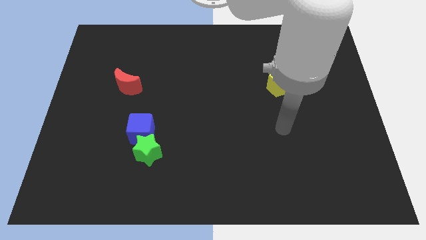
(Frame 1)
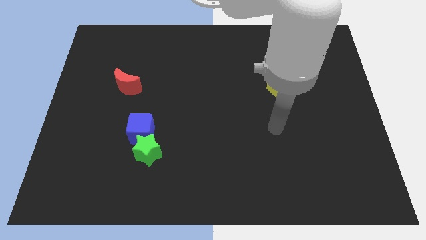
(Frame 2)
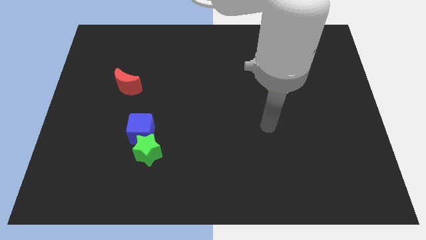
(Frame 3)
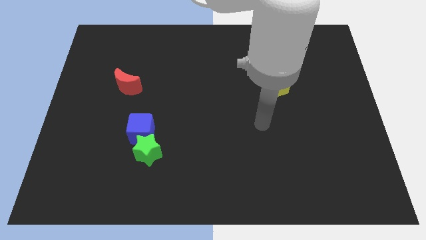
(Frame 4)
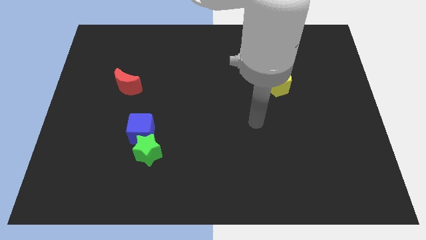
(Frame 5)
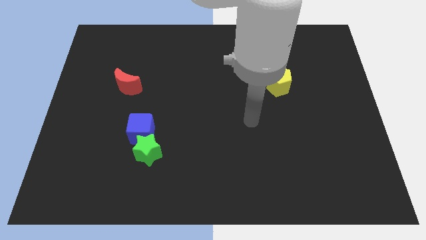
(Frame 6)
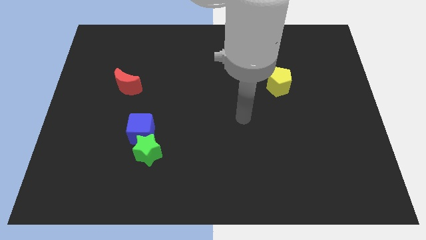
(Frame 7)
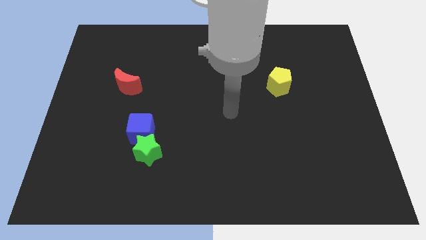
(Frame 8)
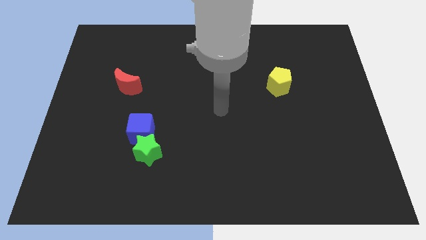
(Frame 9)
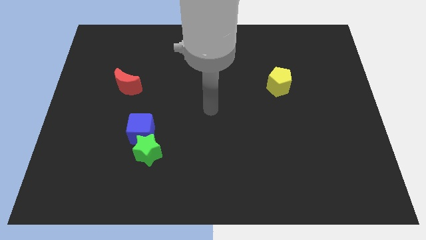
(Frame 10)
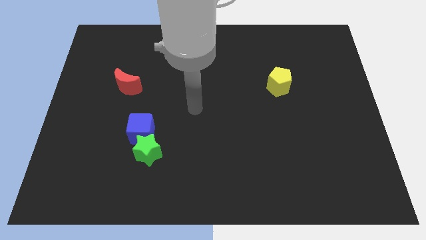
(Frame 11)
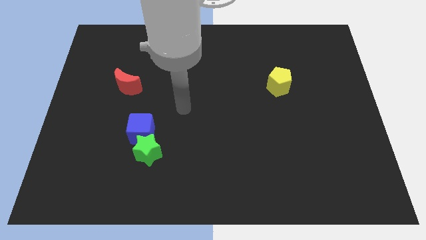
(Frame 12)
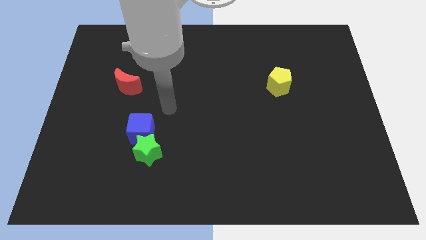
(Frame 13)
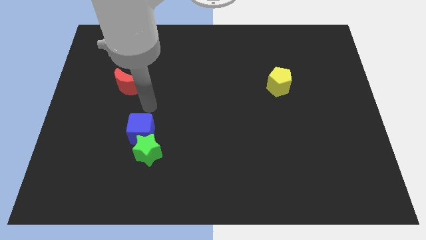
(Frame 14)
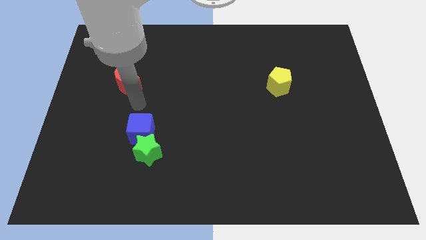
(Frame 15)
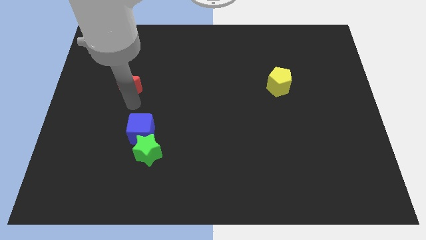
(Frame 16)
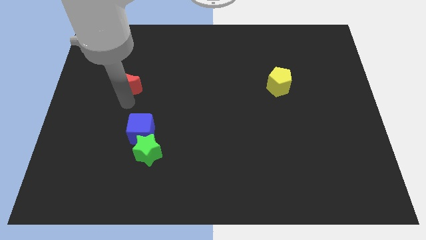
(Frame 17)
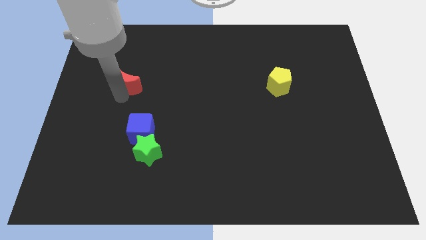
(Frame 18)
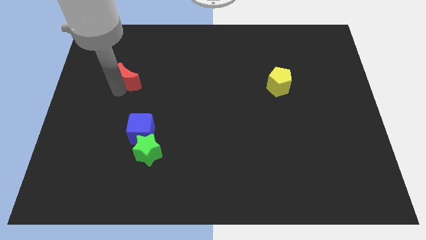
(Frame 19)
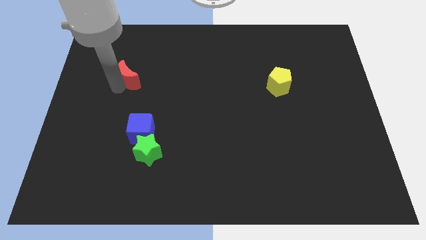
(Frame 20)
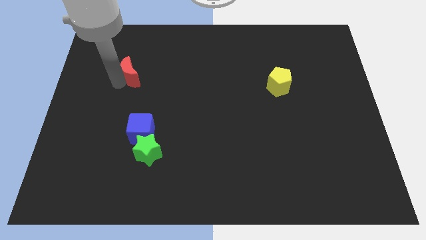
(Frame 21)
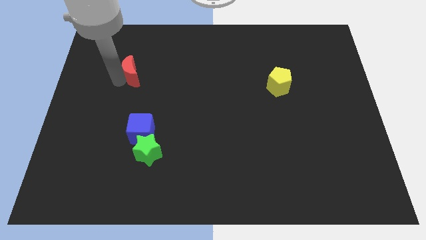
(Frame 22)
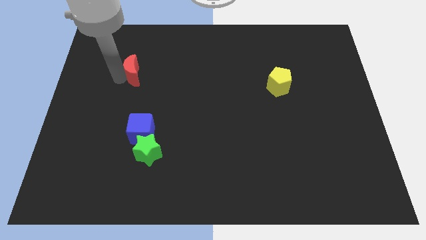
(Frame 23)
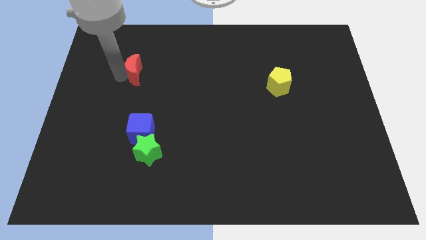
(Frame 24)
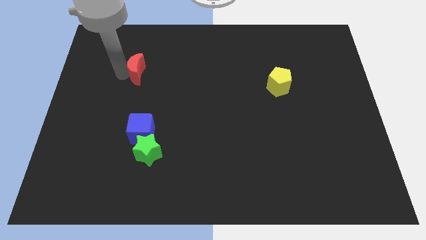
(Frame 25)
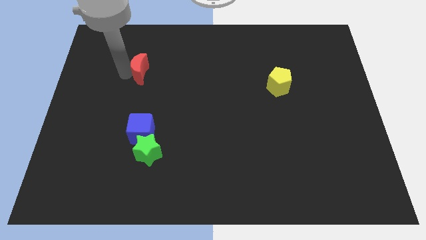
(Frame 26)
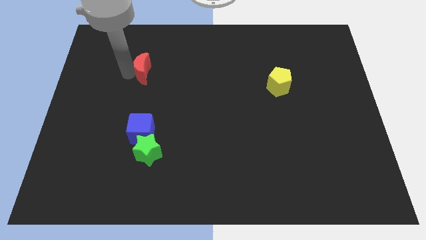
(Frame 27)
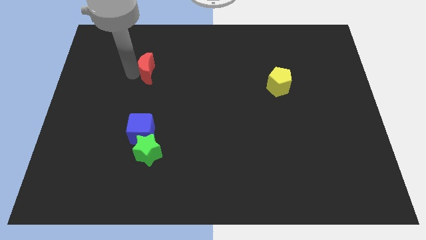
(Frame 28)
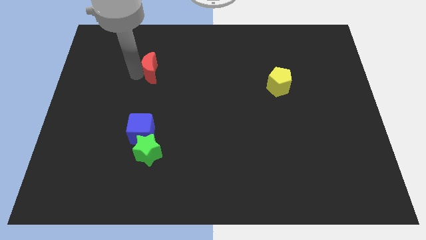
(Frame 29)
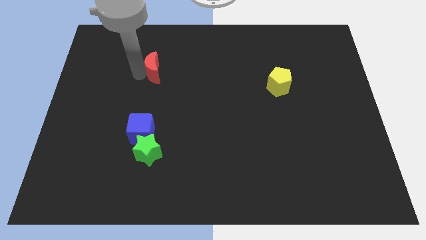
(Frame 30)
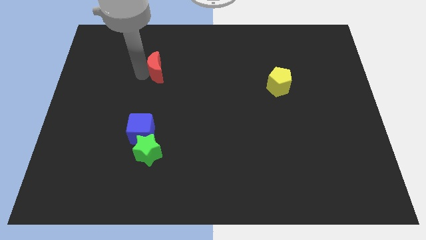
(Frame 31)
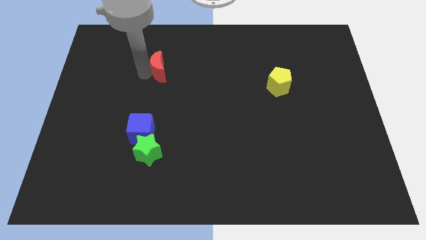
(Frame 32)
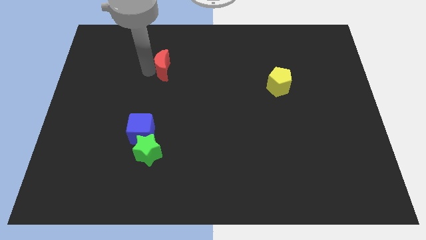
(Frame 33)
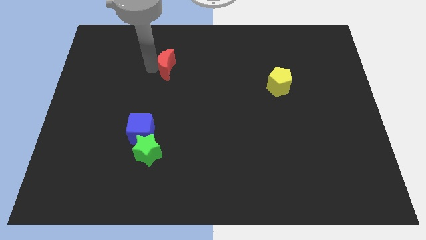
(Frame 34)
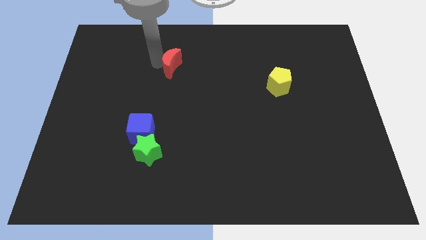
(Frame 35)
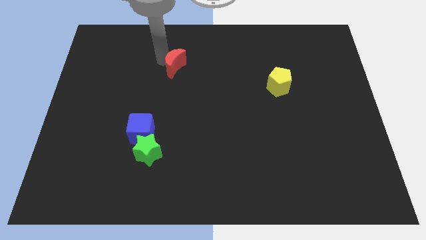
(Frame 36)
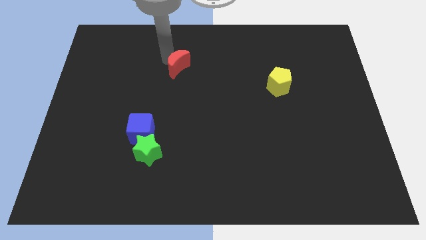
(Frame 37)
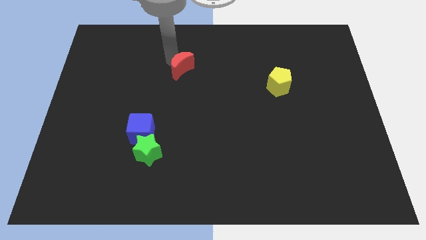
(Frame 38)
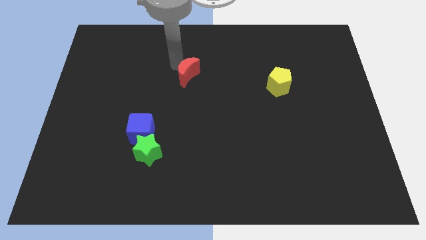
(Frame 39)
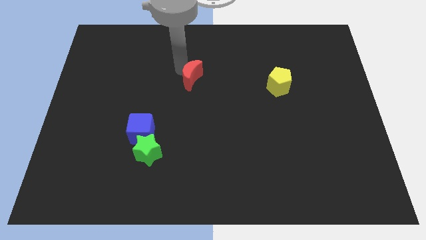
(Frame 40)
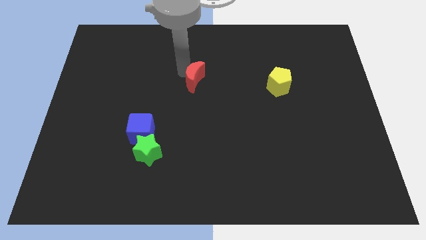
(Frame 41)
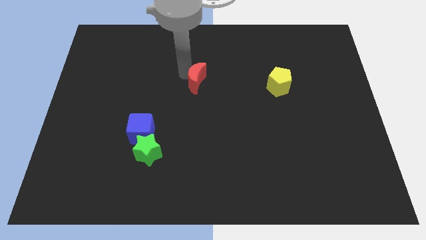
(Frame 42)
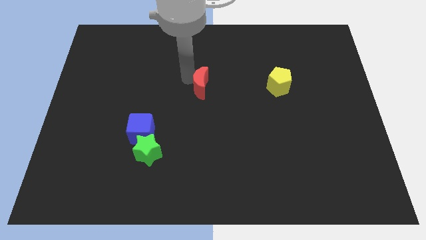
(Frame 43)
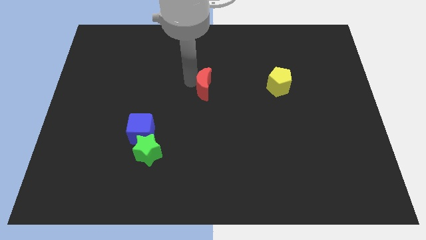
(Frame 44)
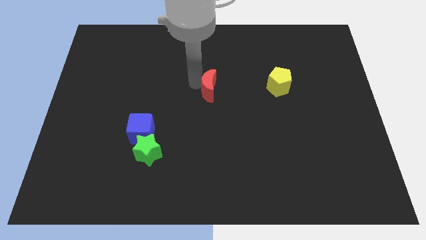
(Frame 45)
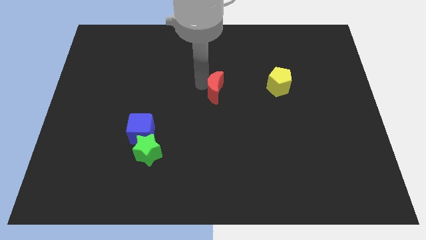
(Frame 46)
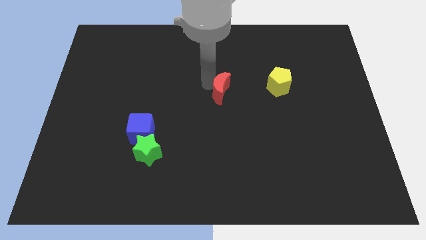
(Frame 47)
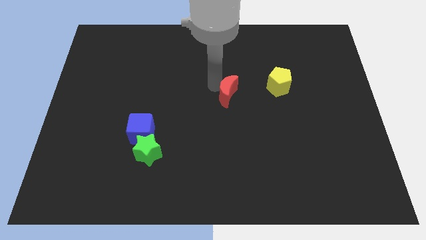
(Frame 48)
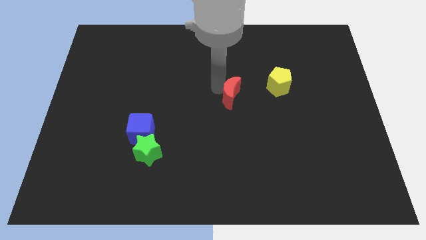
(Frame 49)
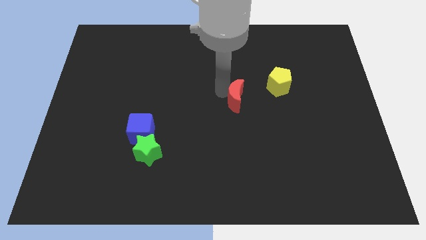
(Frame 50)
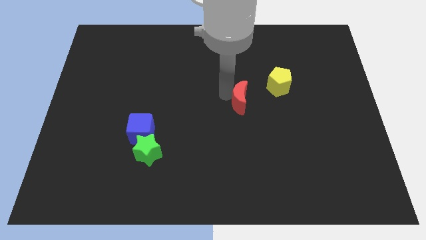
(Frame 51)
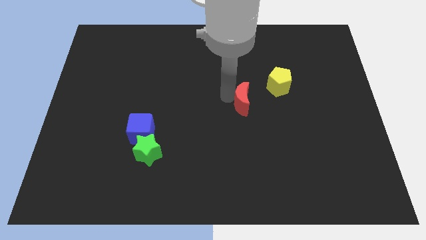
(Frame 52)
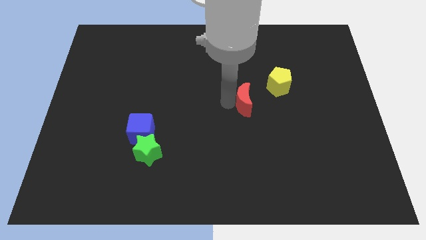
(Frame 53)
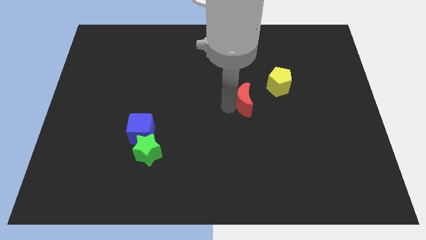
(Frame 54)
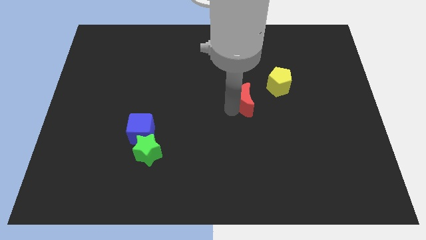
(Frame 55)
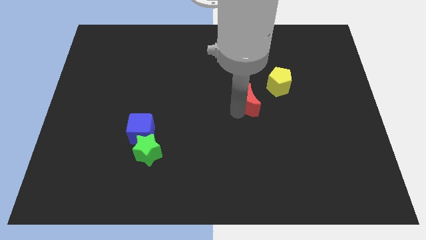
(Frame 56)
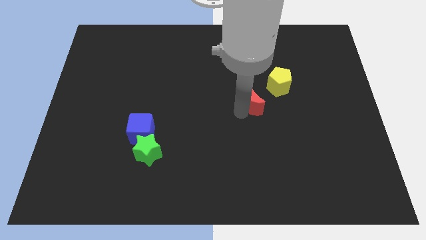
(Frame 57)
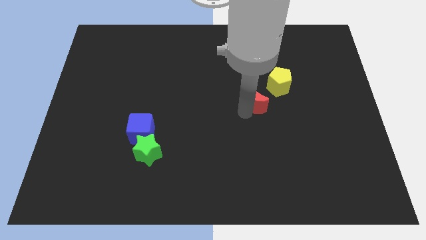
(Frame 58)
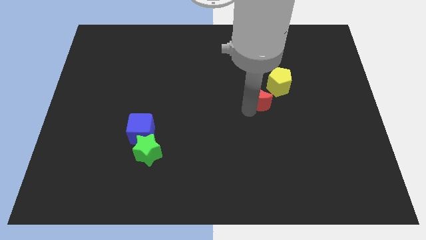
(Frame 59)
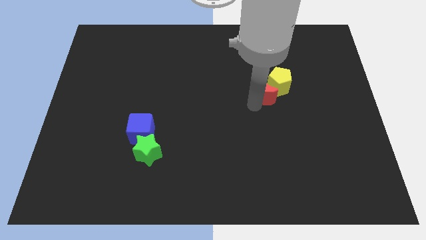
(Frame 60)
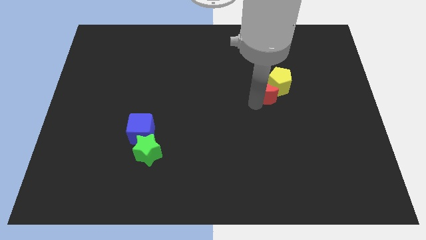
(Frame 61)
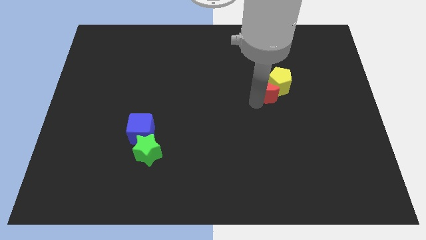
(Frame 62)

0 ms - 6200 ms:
move the moon next to the yellow pentagon

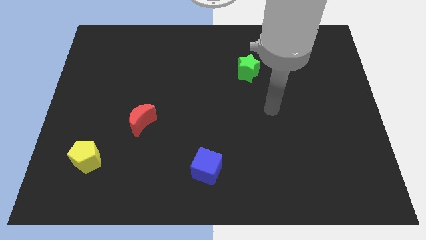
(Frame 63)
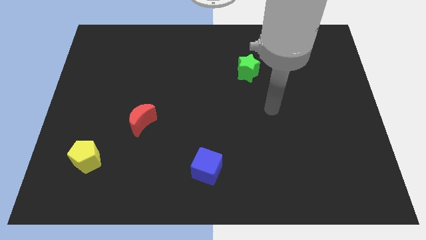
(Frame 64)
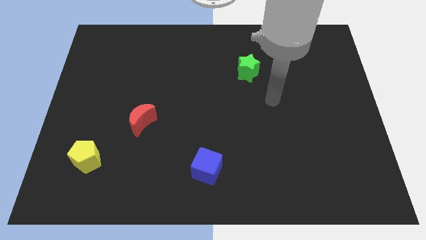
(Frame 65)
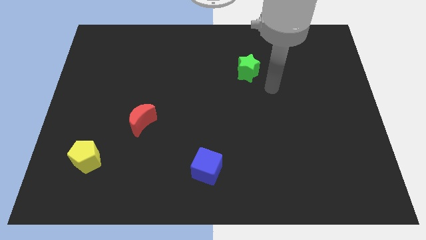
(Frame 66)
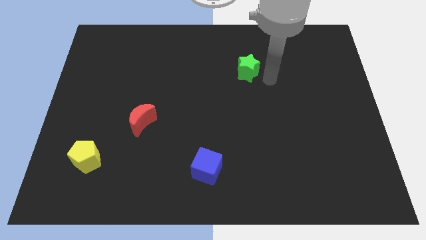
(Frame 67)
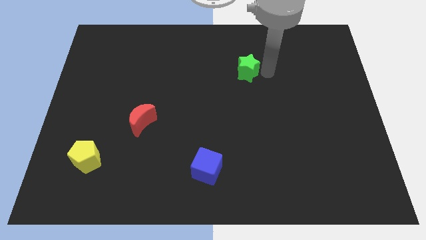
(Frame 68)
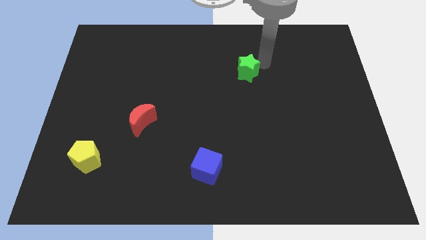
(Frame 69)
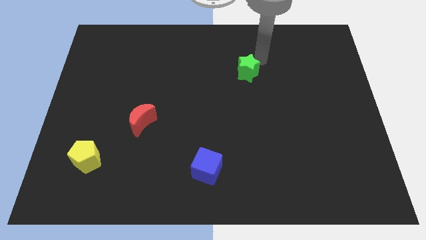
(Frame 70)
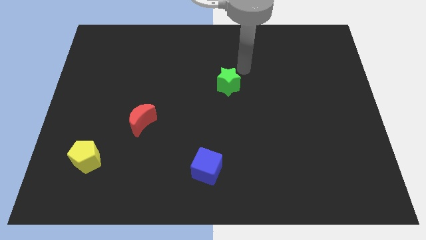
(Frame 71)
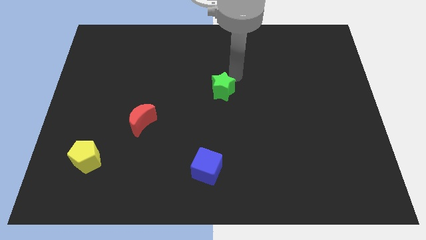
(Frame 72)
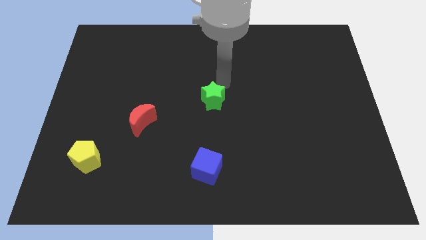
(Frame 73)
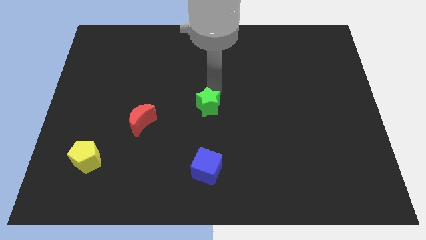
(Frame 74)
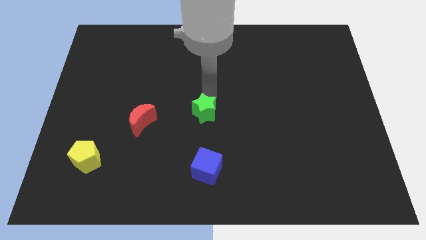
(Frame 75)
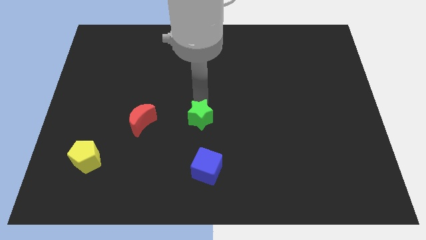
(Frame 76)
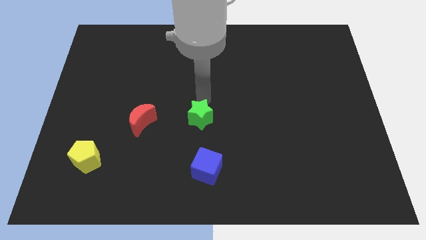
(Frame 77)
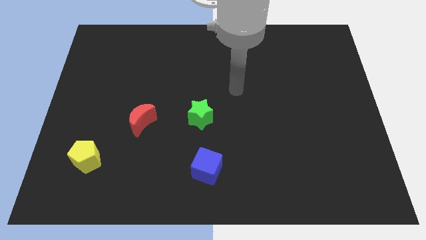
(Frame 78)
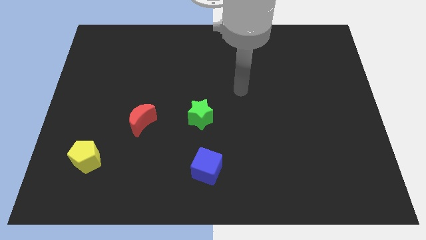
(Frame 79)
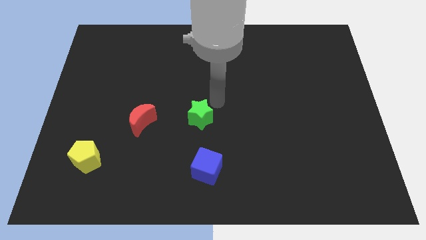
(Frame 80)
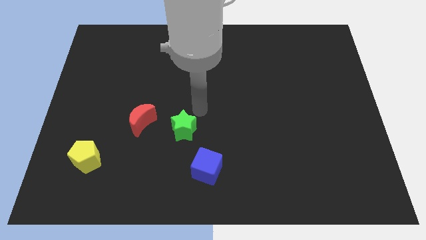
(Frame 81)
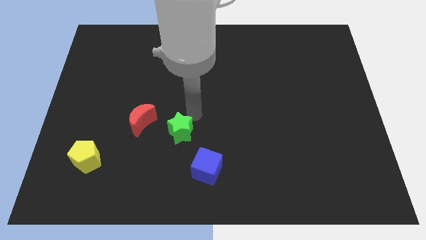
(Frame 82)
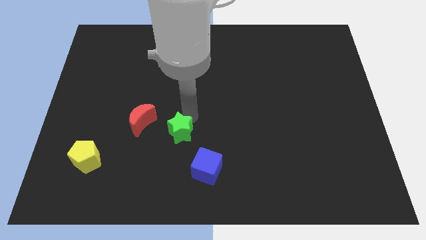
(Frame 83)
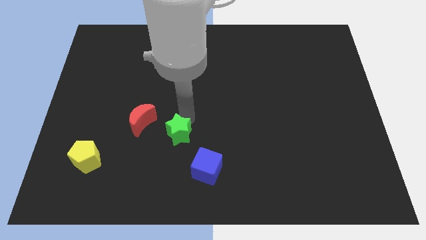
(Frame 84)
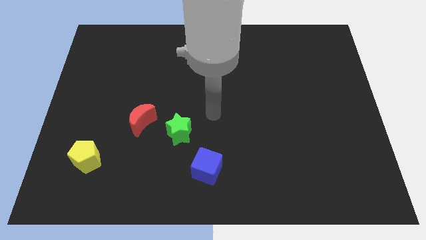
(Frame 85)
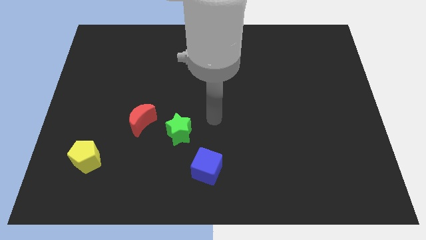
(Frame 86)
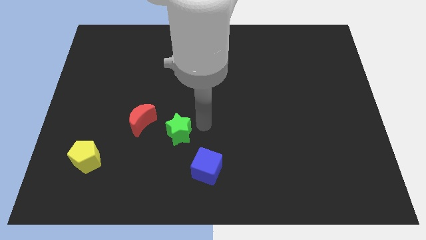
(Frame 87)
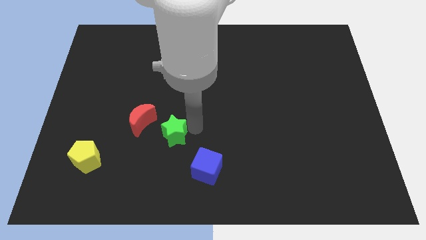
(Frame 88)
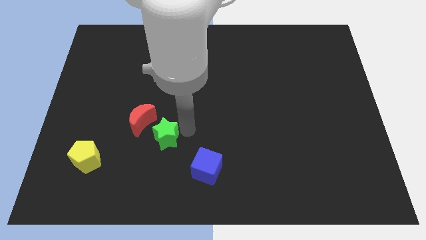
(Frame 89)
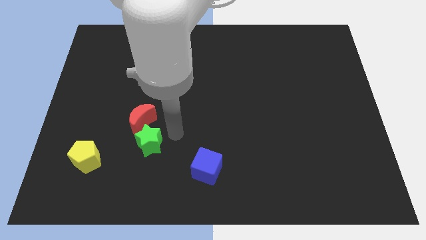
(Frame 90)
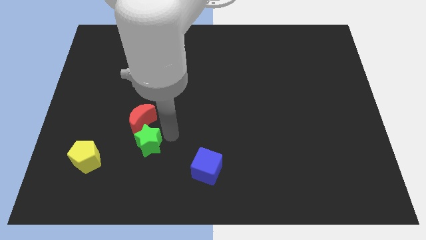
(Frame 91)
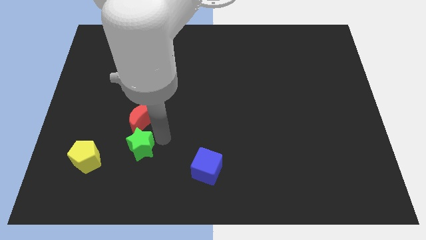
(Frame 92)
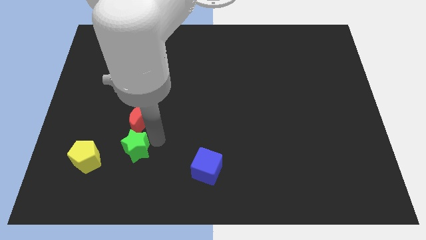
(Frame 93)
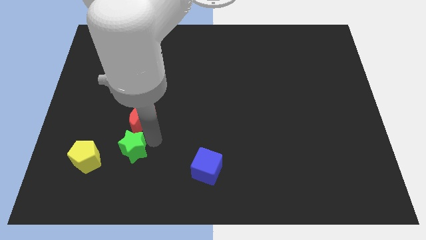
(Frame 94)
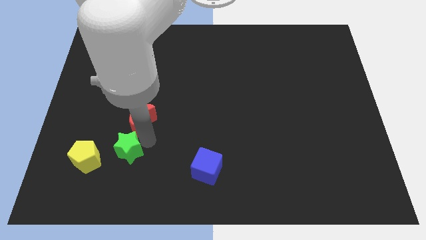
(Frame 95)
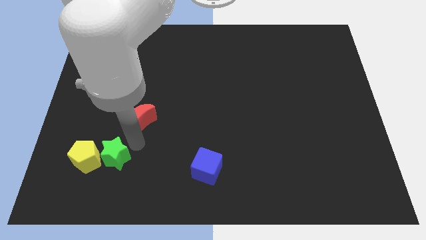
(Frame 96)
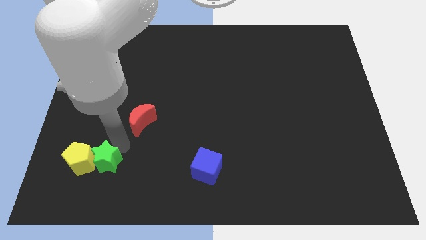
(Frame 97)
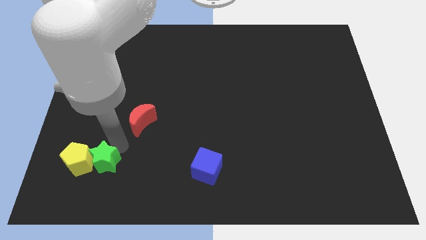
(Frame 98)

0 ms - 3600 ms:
slide the green block towards the yellow block
